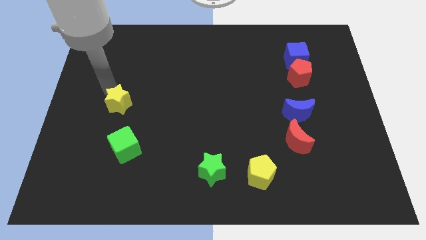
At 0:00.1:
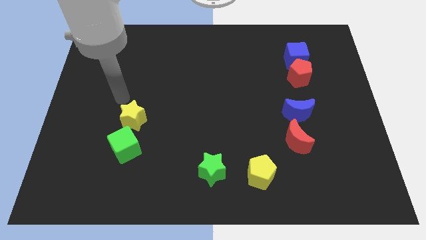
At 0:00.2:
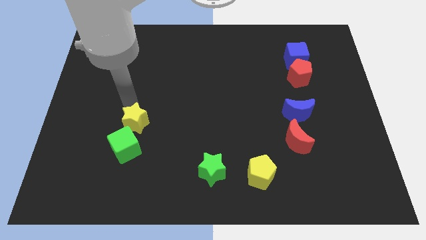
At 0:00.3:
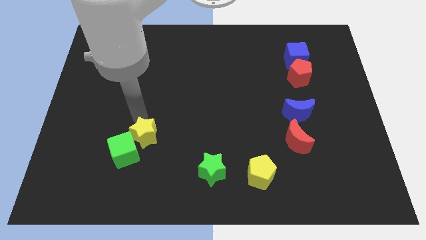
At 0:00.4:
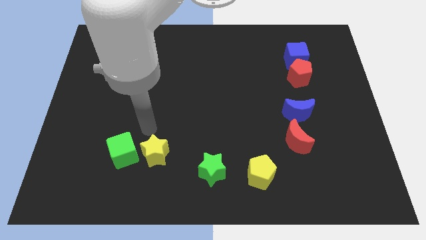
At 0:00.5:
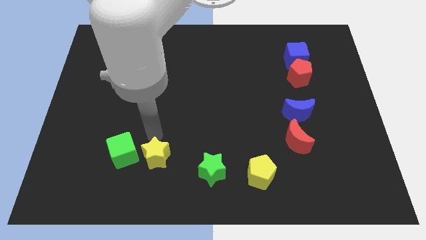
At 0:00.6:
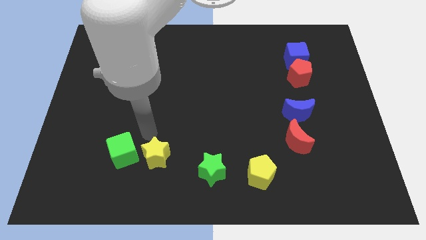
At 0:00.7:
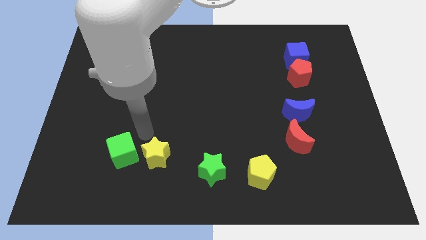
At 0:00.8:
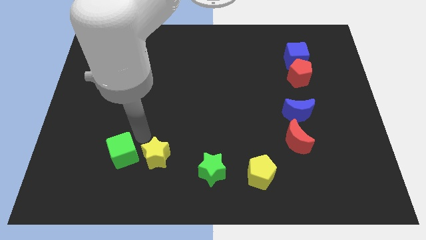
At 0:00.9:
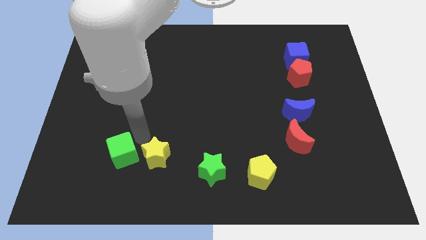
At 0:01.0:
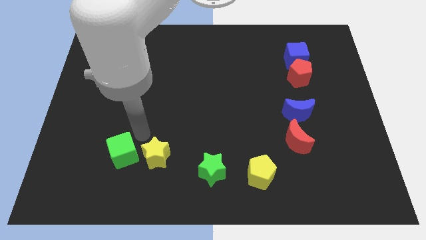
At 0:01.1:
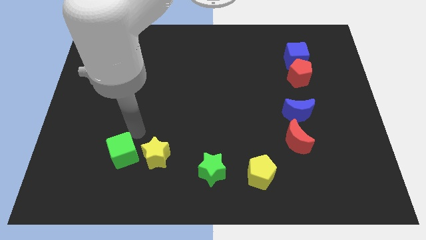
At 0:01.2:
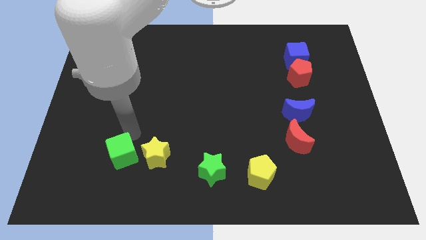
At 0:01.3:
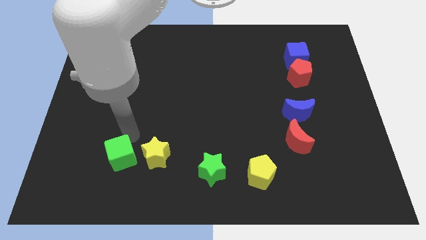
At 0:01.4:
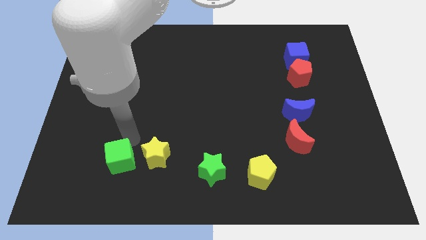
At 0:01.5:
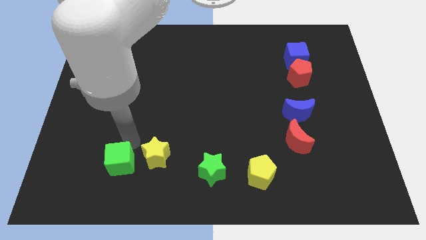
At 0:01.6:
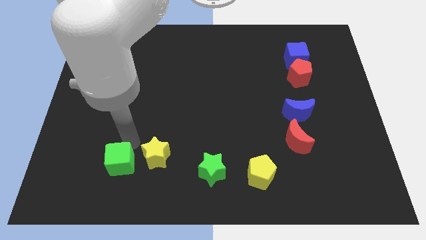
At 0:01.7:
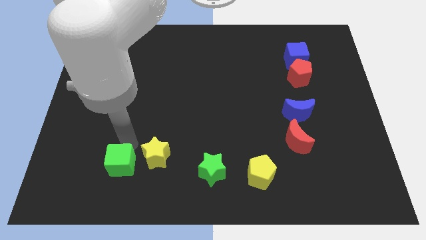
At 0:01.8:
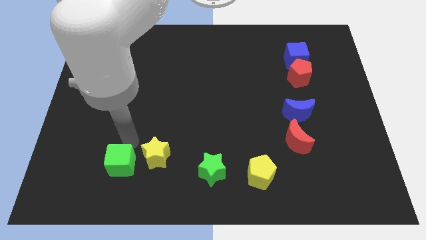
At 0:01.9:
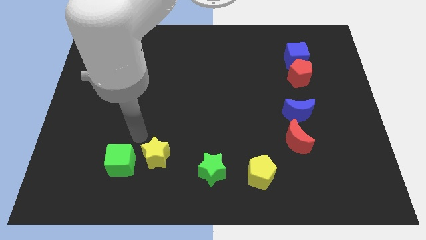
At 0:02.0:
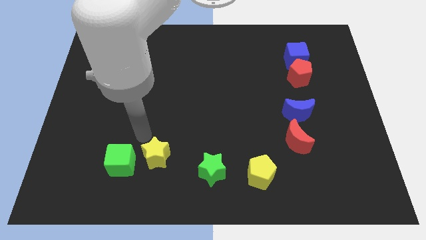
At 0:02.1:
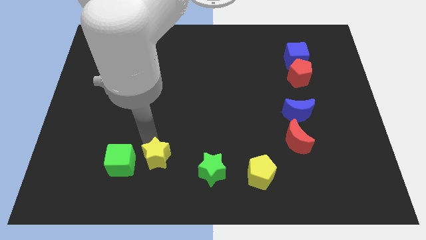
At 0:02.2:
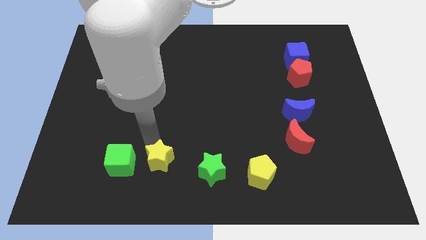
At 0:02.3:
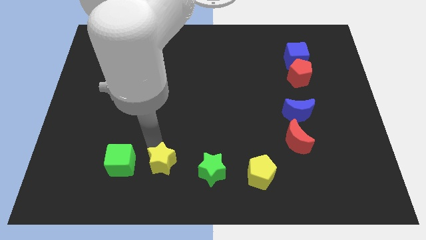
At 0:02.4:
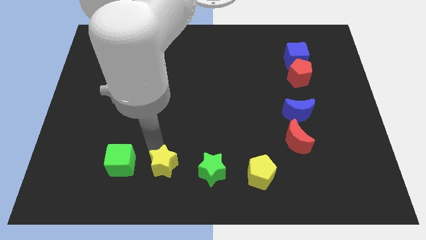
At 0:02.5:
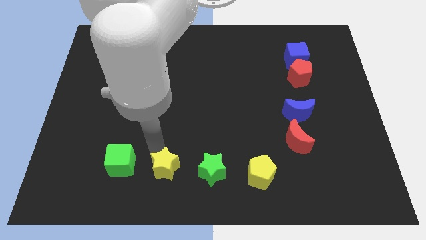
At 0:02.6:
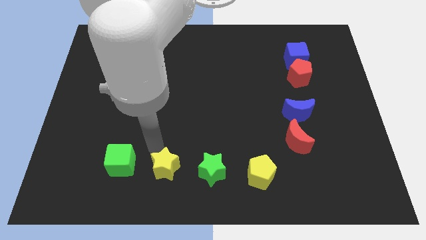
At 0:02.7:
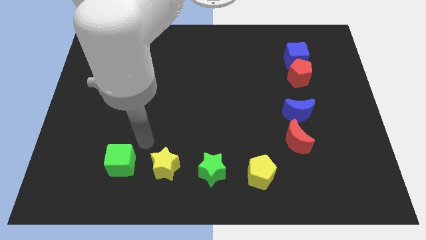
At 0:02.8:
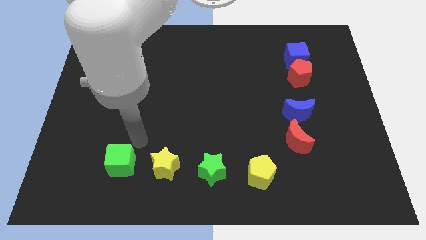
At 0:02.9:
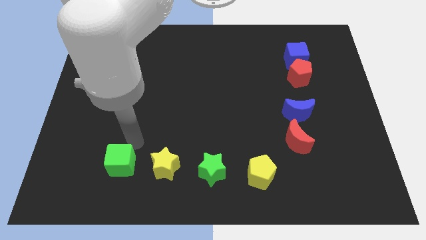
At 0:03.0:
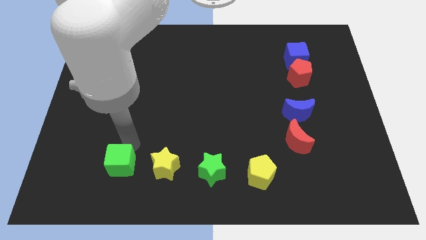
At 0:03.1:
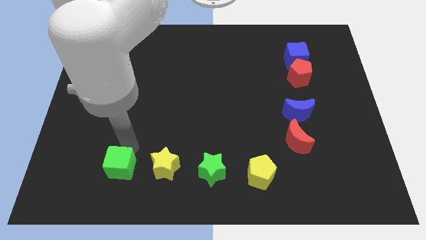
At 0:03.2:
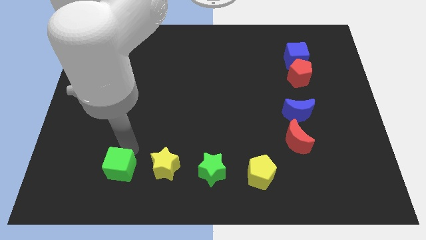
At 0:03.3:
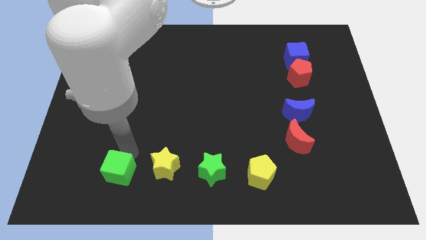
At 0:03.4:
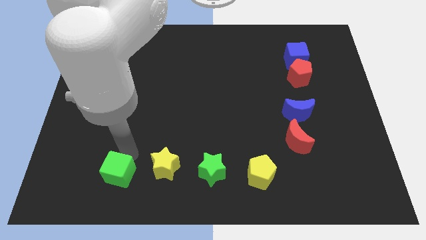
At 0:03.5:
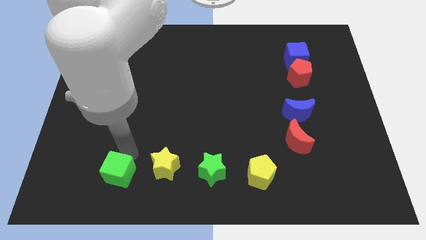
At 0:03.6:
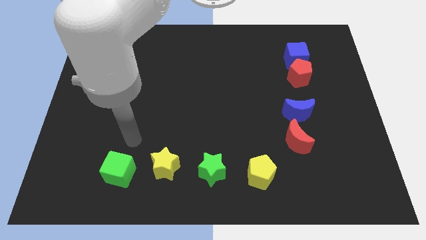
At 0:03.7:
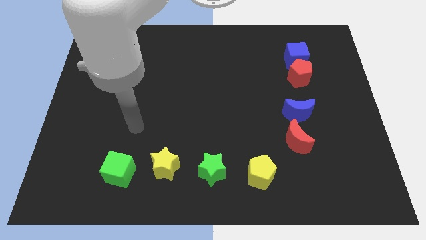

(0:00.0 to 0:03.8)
adjust the green cube and the yellow star to form a horizontal line

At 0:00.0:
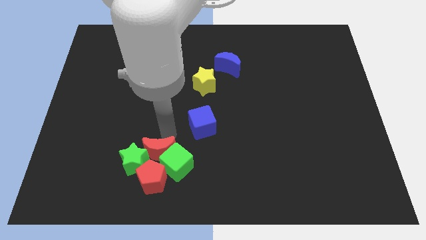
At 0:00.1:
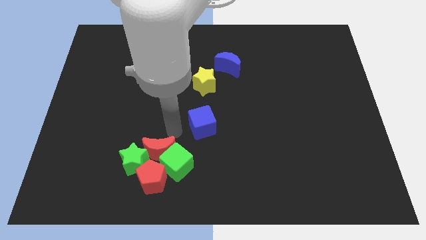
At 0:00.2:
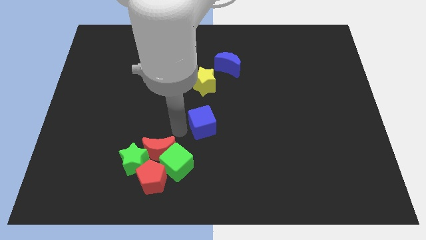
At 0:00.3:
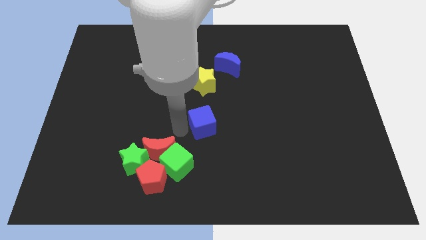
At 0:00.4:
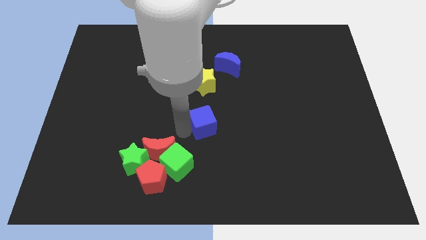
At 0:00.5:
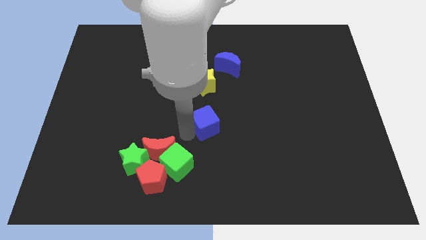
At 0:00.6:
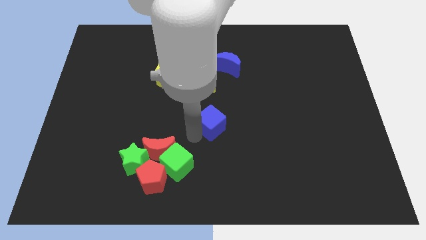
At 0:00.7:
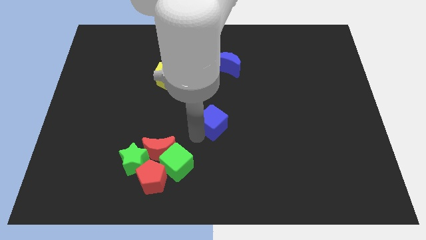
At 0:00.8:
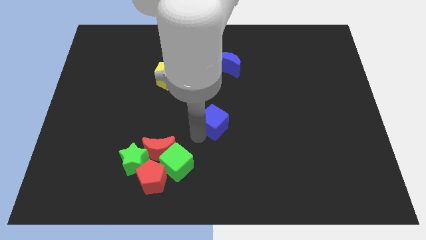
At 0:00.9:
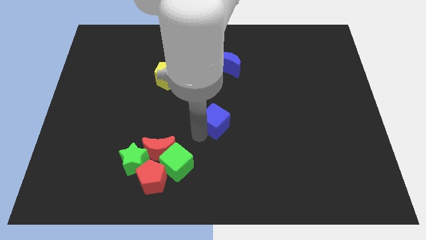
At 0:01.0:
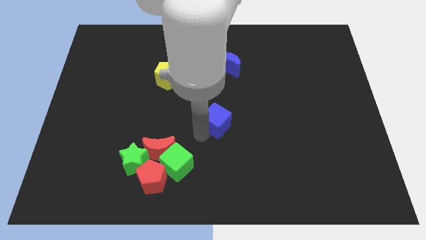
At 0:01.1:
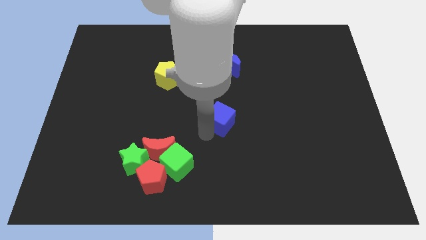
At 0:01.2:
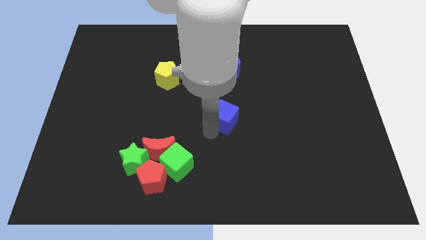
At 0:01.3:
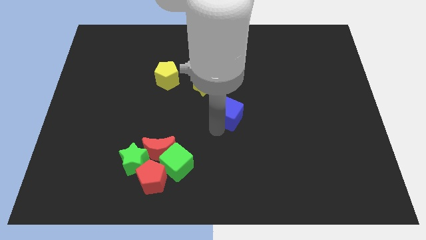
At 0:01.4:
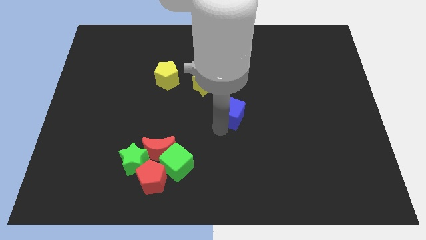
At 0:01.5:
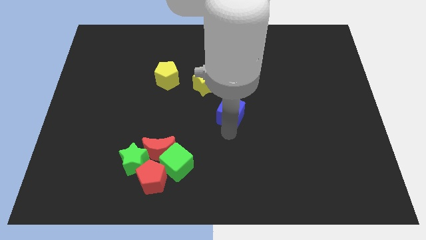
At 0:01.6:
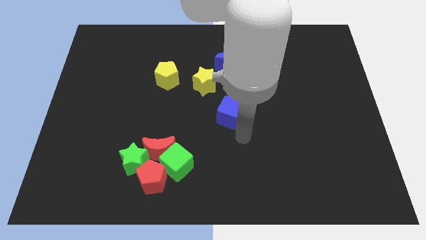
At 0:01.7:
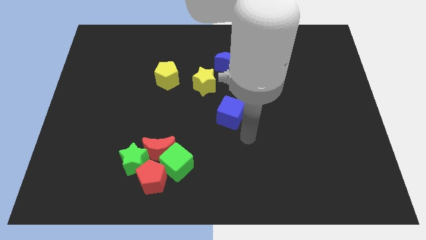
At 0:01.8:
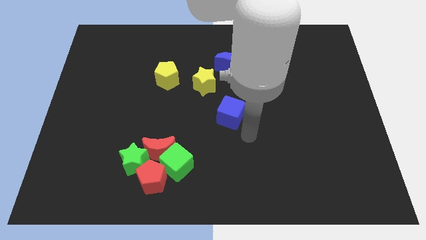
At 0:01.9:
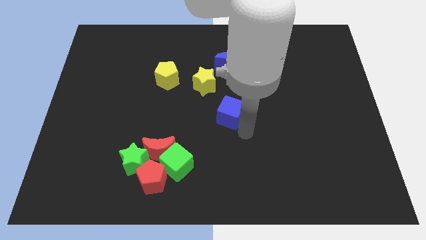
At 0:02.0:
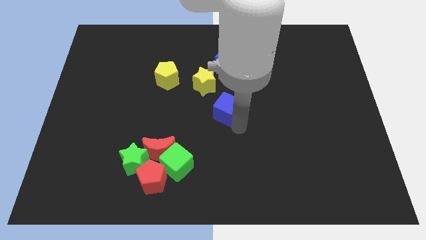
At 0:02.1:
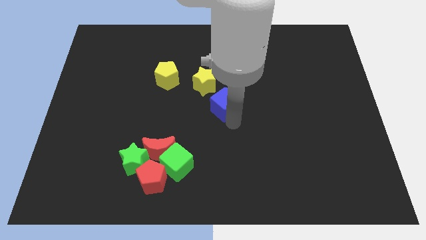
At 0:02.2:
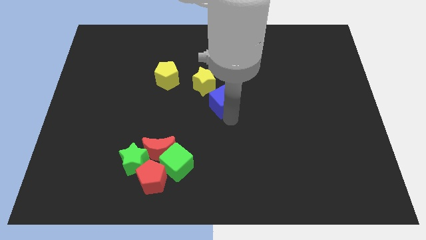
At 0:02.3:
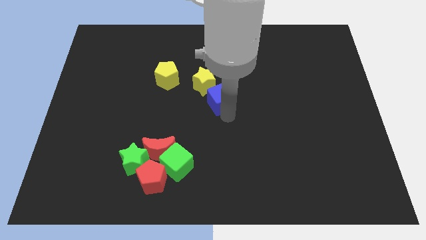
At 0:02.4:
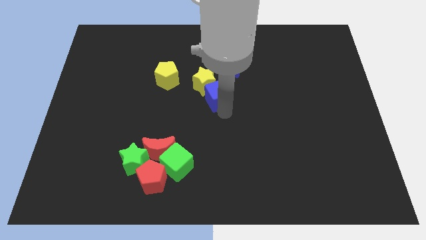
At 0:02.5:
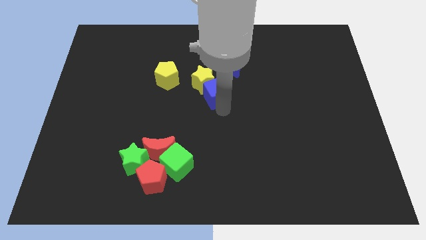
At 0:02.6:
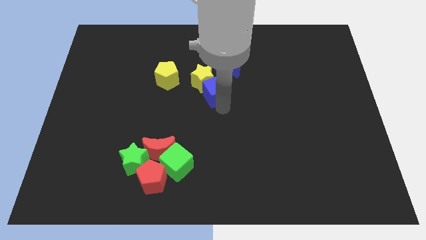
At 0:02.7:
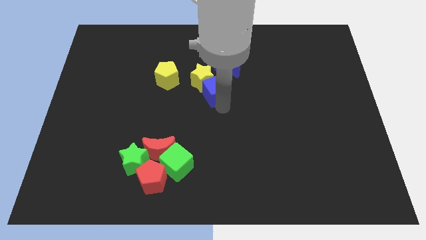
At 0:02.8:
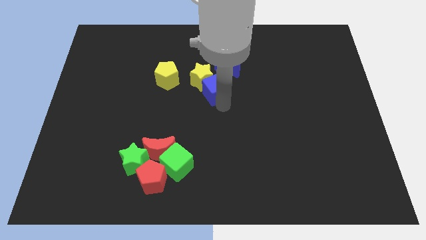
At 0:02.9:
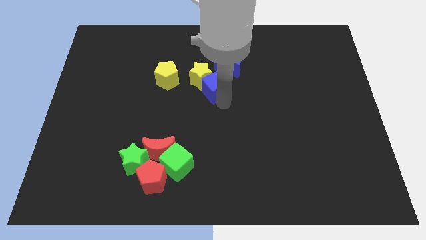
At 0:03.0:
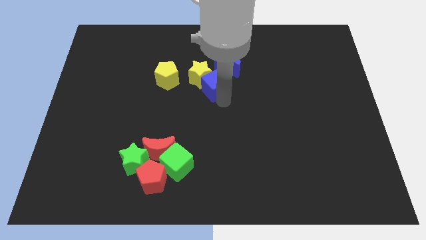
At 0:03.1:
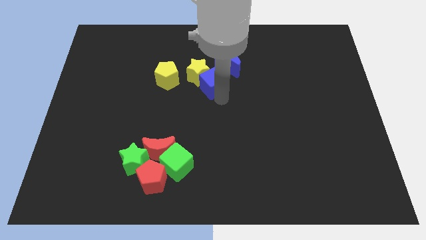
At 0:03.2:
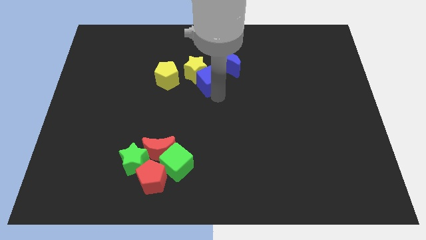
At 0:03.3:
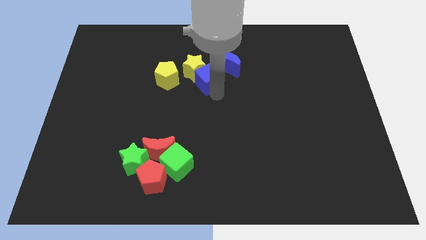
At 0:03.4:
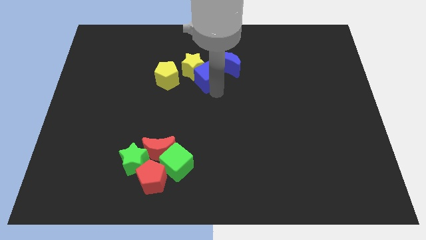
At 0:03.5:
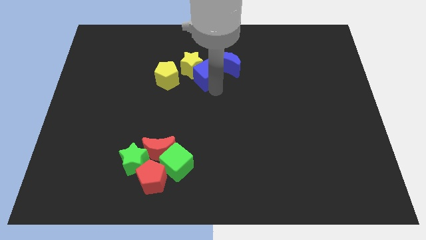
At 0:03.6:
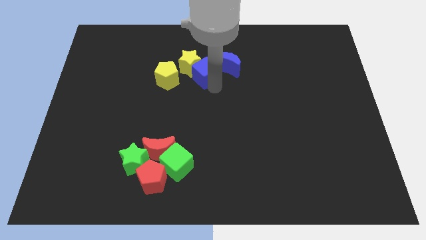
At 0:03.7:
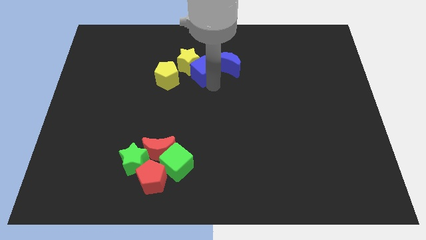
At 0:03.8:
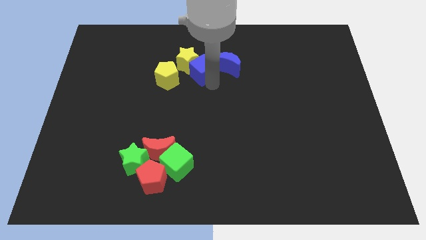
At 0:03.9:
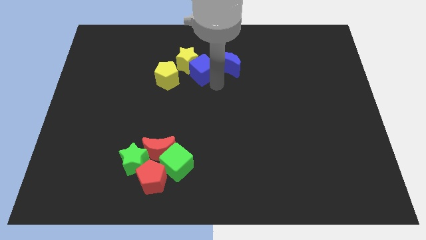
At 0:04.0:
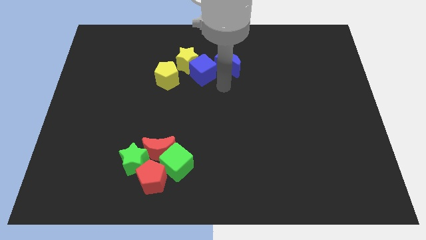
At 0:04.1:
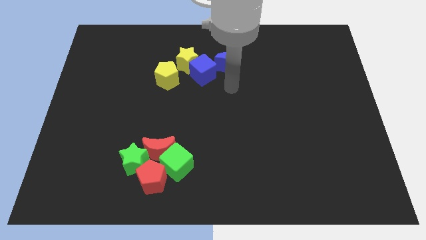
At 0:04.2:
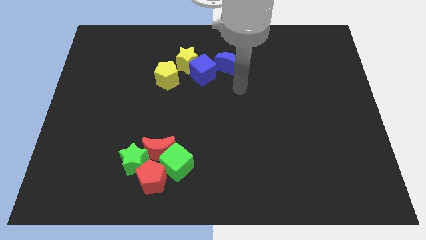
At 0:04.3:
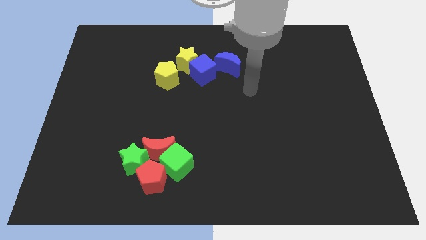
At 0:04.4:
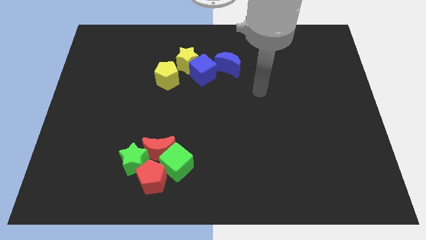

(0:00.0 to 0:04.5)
place the blue cube to the right side of yellow pentagon

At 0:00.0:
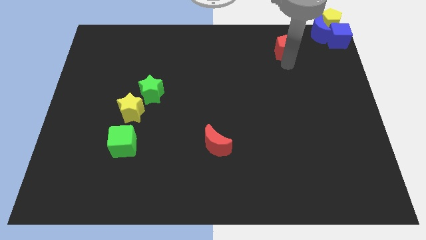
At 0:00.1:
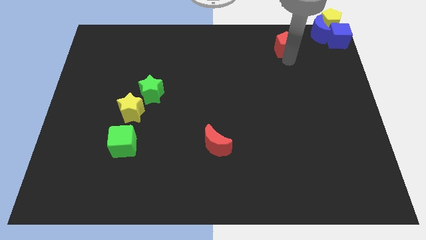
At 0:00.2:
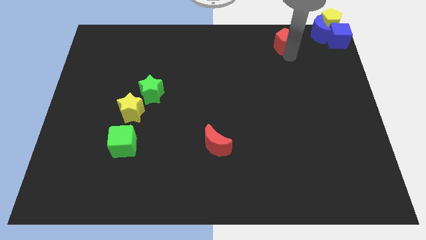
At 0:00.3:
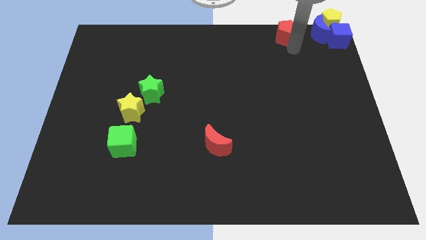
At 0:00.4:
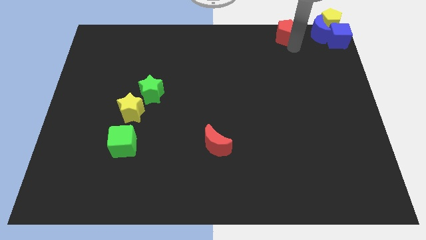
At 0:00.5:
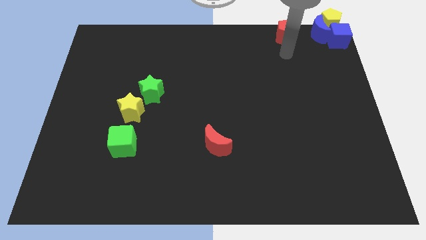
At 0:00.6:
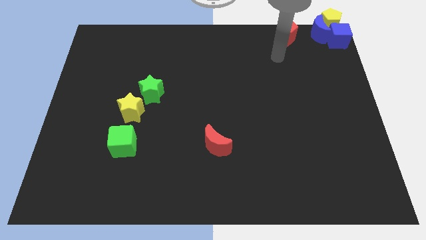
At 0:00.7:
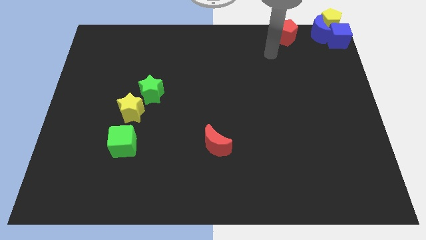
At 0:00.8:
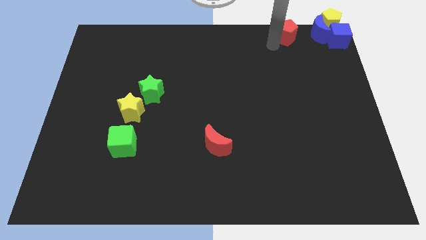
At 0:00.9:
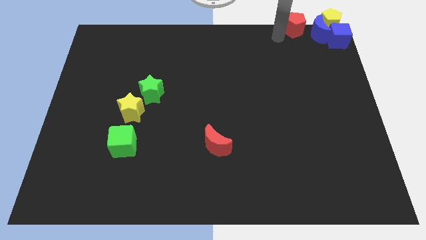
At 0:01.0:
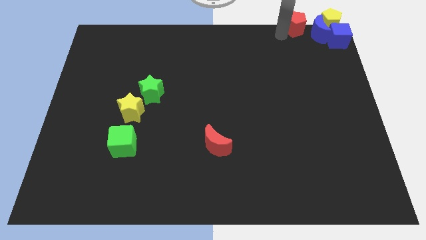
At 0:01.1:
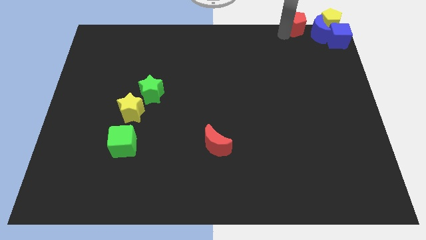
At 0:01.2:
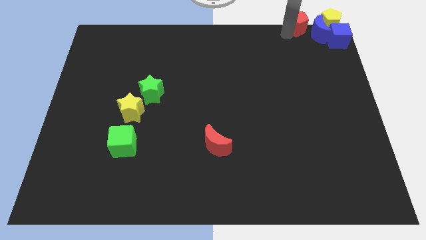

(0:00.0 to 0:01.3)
push the red pentagon to the left of the blue crescent
